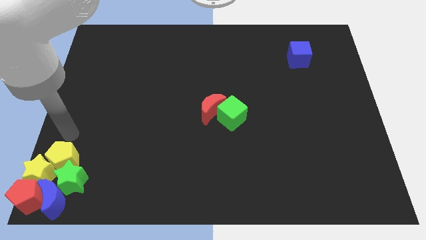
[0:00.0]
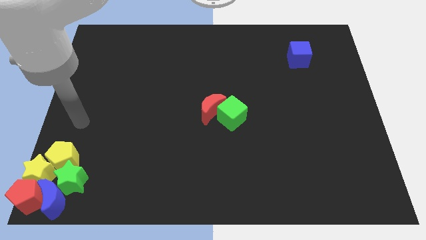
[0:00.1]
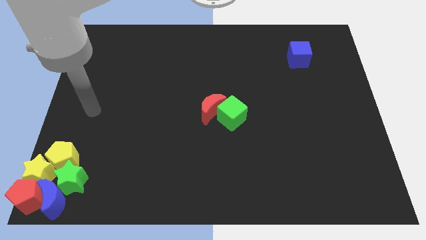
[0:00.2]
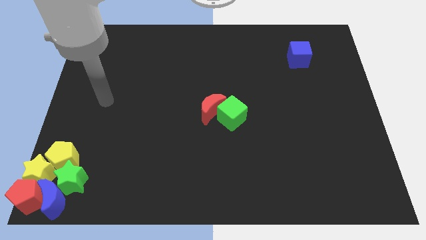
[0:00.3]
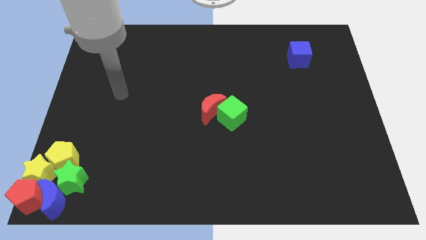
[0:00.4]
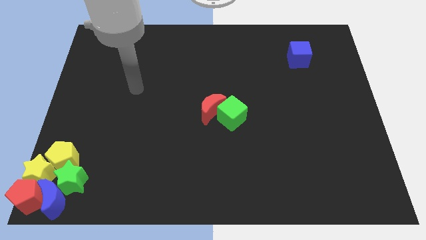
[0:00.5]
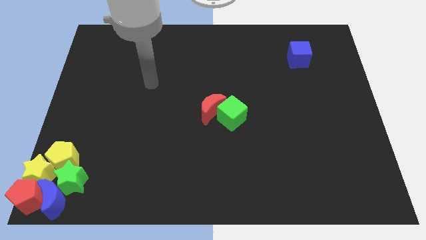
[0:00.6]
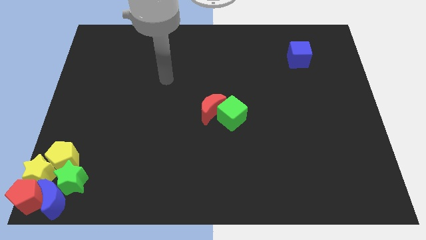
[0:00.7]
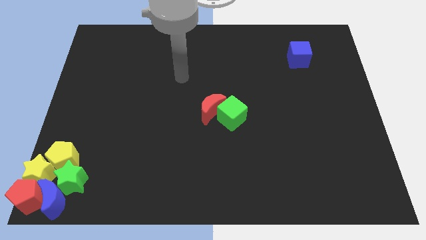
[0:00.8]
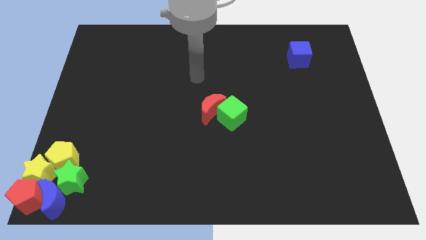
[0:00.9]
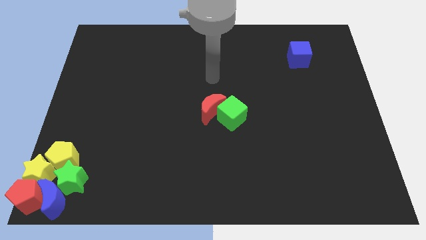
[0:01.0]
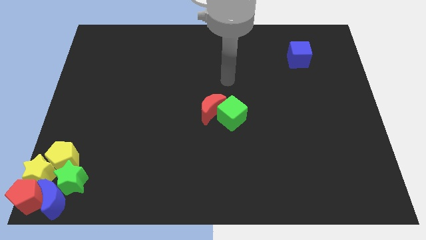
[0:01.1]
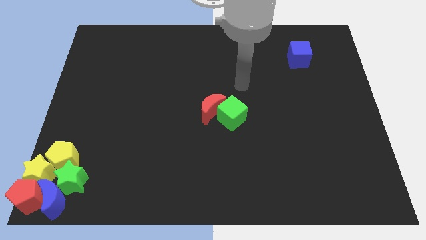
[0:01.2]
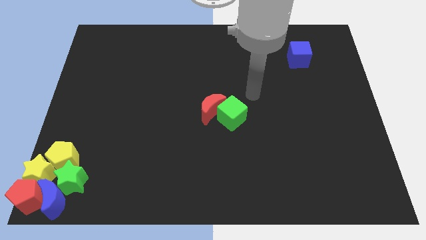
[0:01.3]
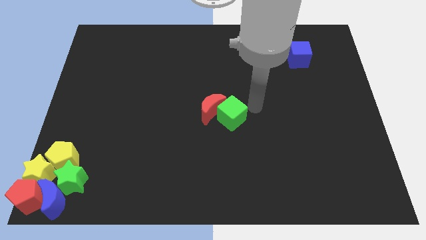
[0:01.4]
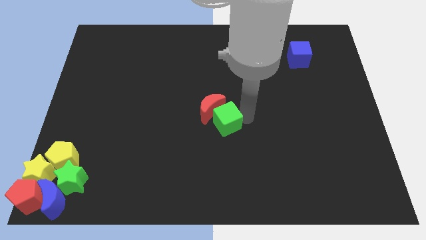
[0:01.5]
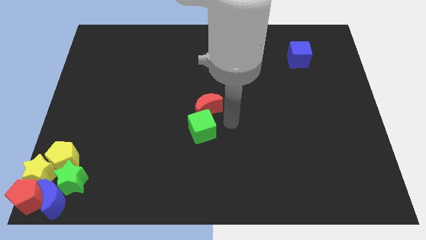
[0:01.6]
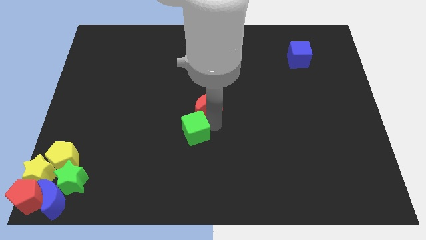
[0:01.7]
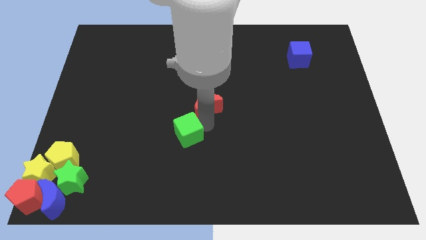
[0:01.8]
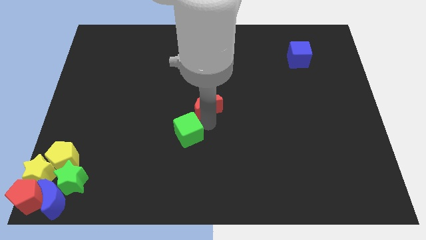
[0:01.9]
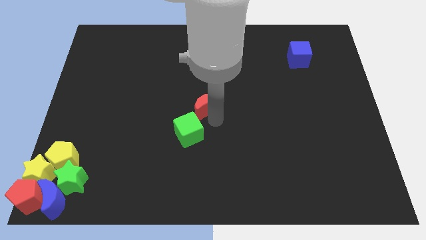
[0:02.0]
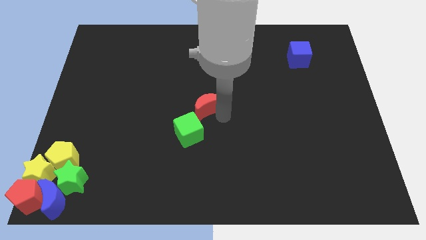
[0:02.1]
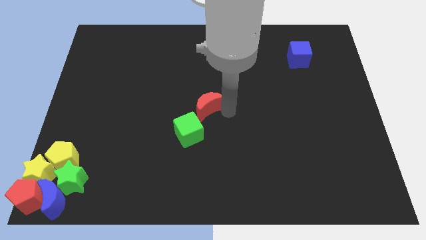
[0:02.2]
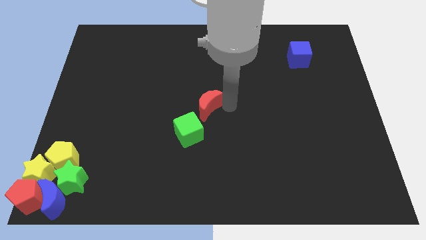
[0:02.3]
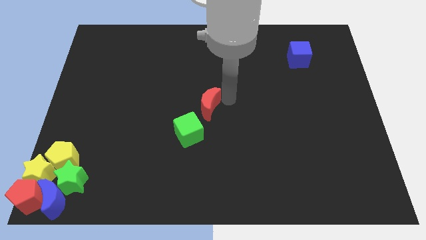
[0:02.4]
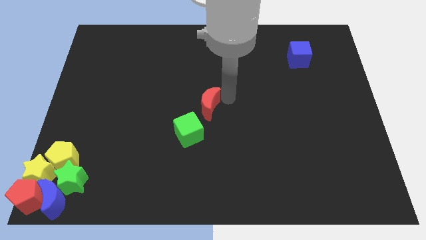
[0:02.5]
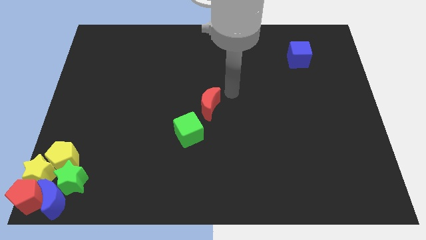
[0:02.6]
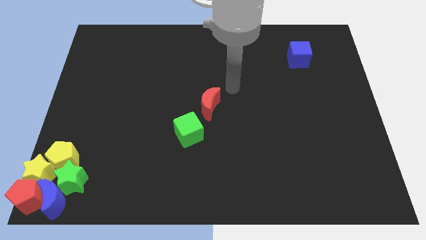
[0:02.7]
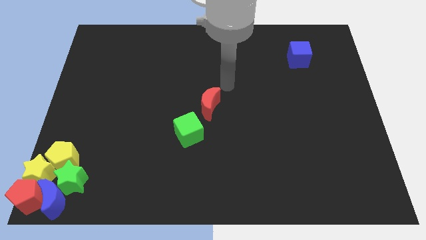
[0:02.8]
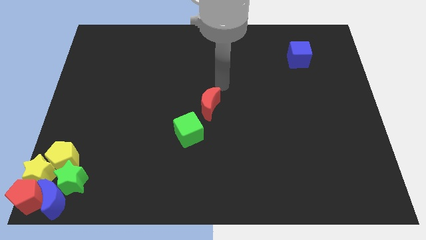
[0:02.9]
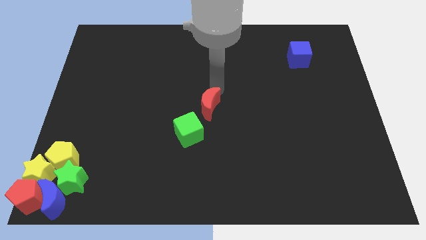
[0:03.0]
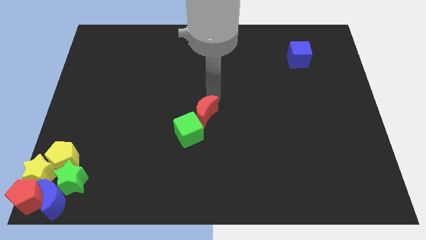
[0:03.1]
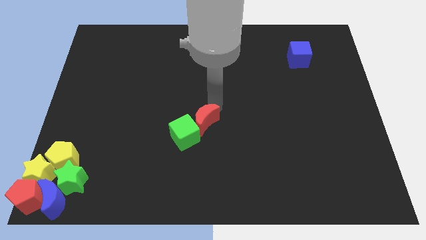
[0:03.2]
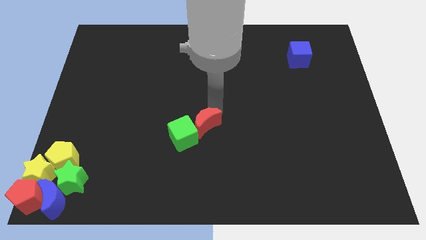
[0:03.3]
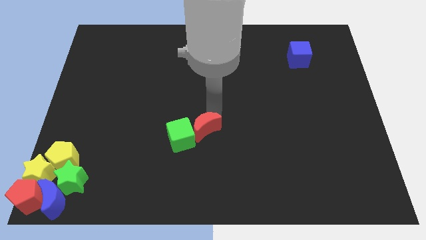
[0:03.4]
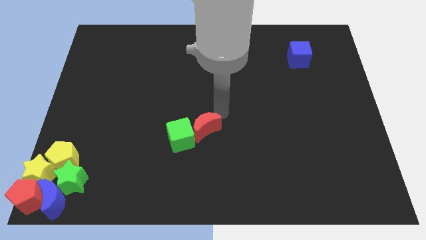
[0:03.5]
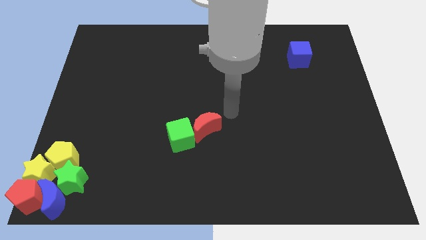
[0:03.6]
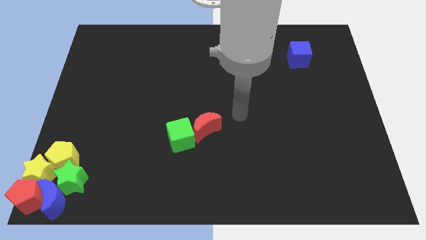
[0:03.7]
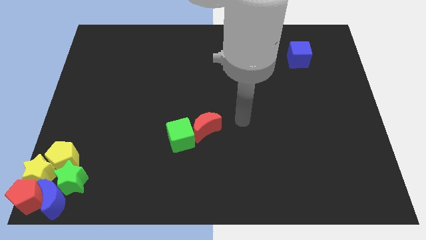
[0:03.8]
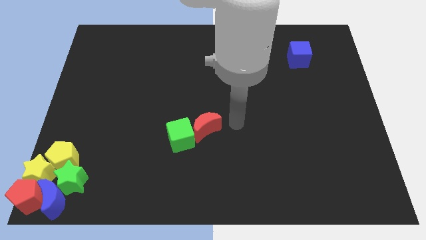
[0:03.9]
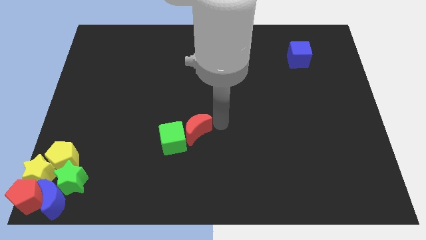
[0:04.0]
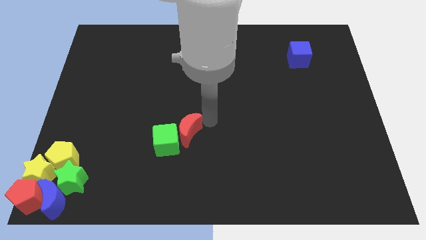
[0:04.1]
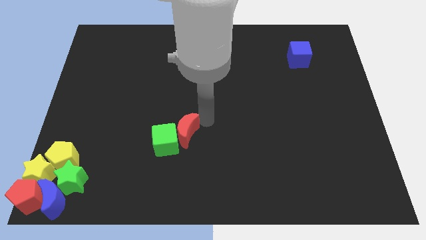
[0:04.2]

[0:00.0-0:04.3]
push the green cube and red moon towards the group of blocks

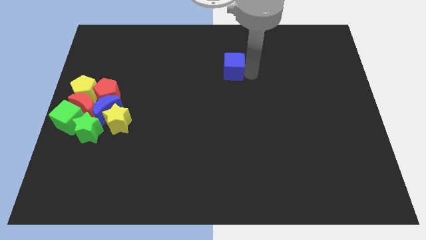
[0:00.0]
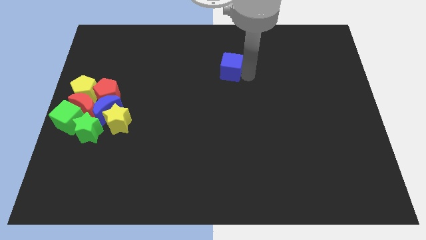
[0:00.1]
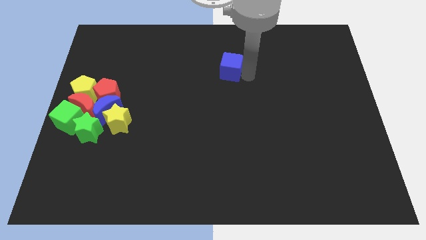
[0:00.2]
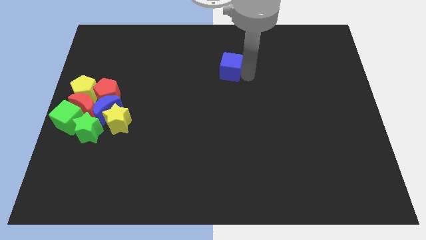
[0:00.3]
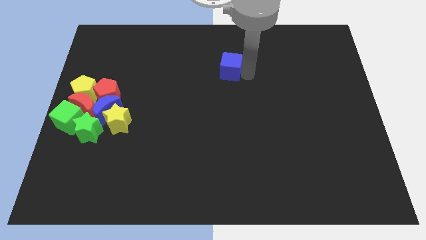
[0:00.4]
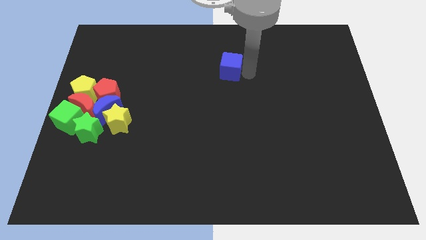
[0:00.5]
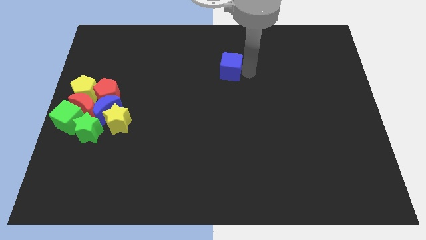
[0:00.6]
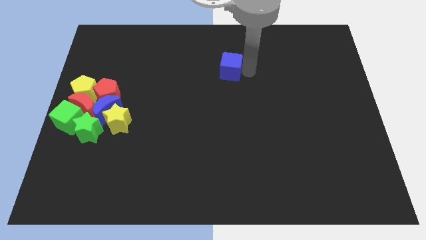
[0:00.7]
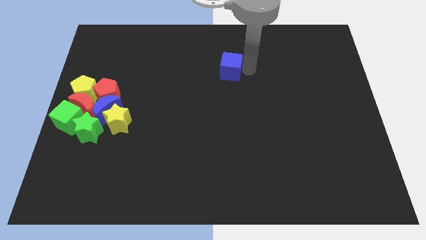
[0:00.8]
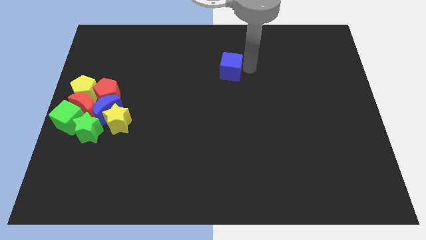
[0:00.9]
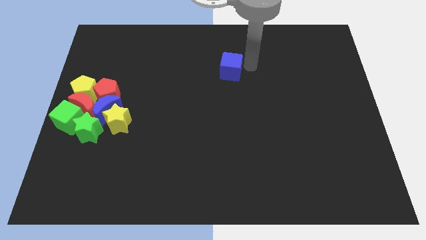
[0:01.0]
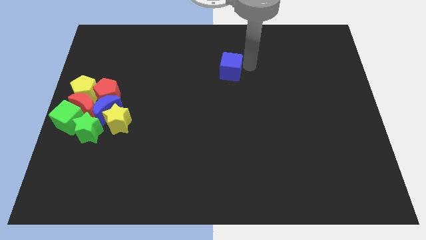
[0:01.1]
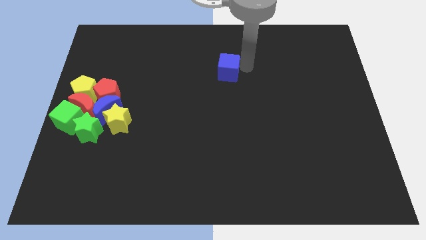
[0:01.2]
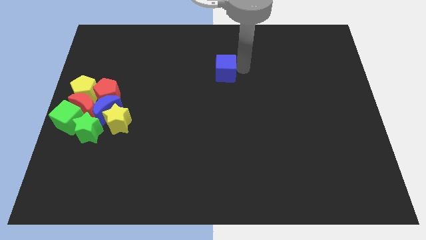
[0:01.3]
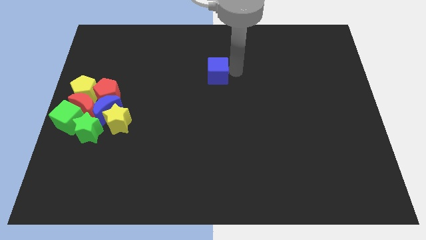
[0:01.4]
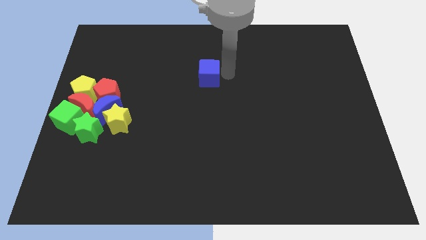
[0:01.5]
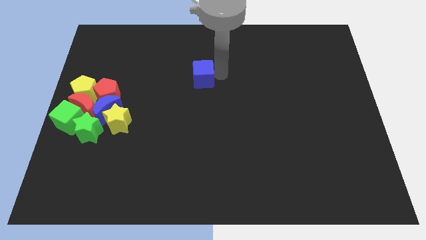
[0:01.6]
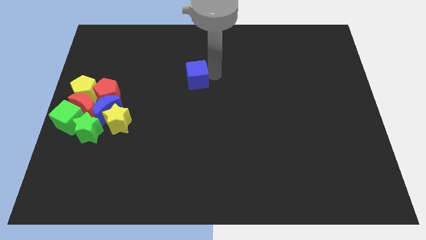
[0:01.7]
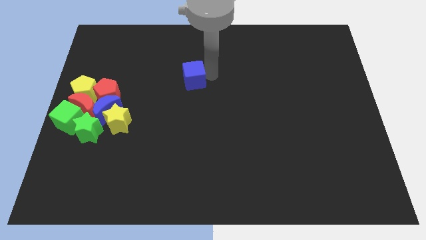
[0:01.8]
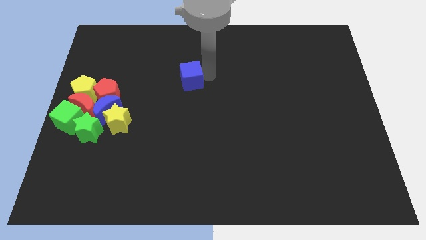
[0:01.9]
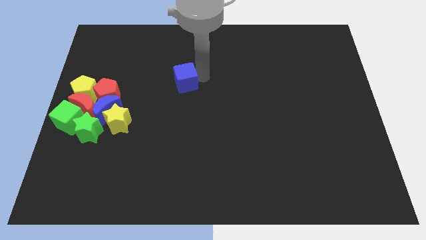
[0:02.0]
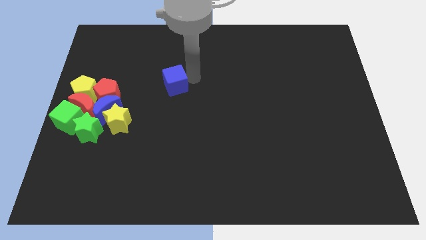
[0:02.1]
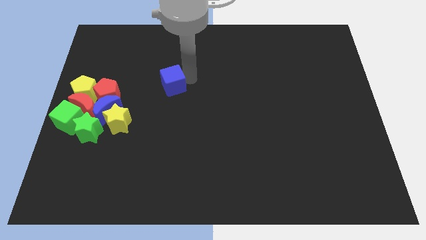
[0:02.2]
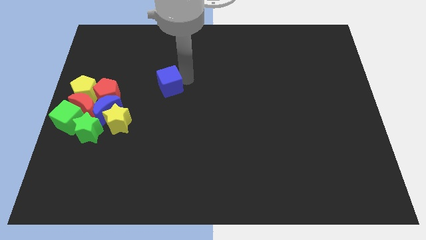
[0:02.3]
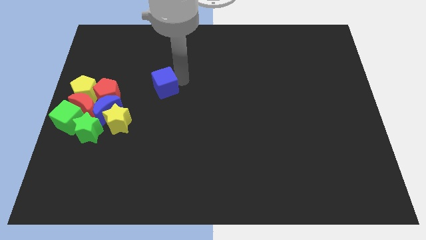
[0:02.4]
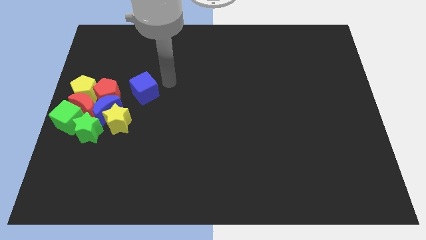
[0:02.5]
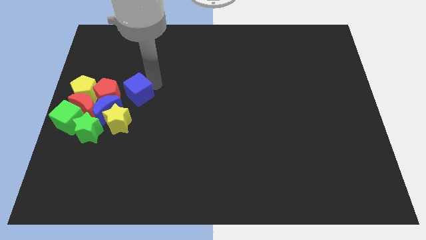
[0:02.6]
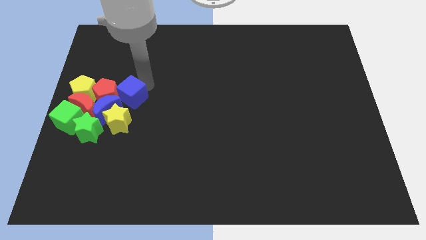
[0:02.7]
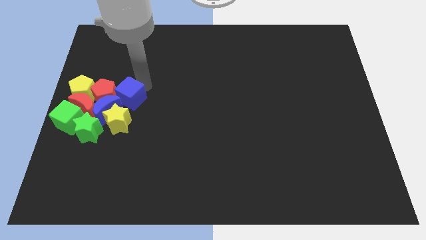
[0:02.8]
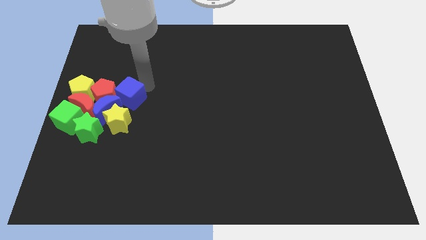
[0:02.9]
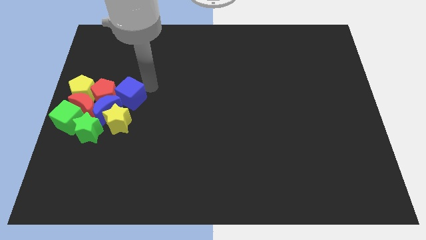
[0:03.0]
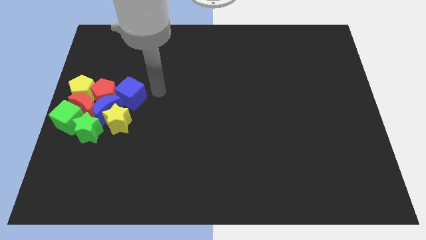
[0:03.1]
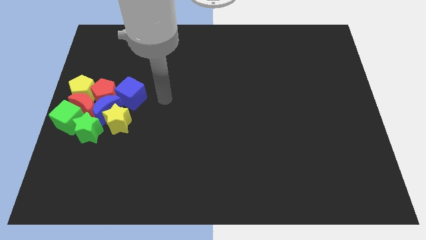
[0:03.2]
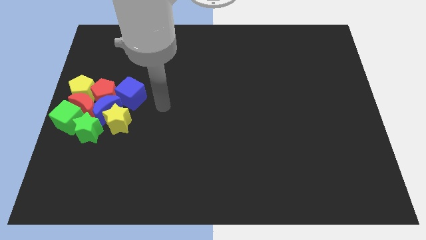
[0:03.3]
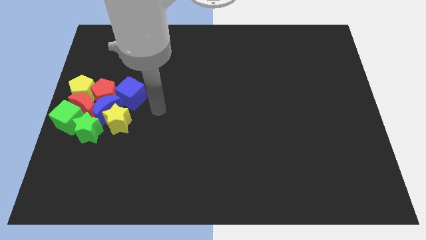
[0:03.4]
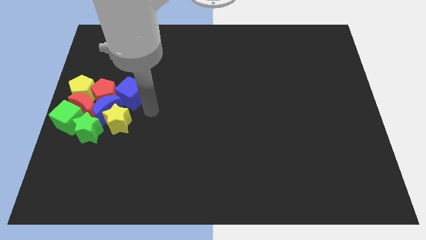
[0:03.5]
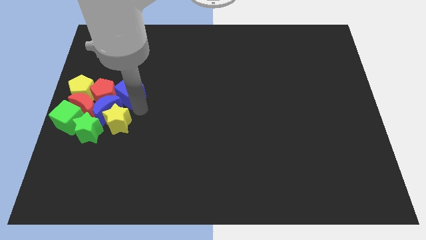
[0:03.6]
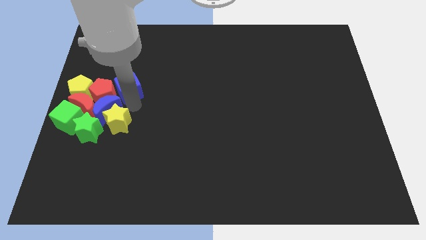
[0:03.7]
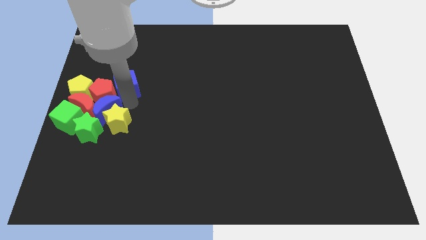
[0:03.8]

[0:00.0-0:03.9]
push the blue cube to the group of blocks

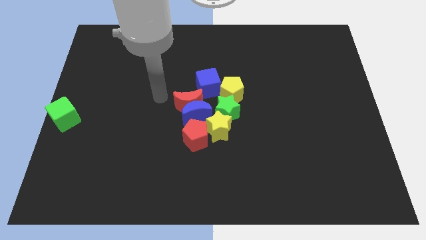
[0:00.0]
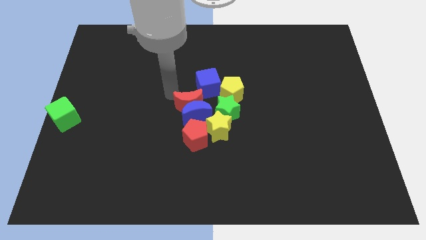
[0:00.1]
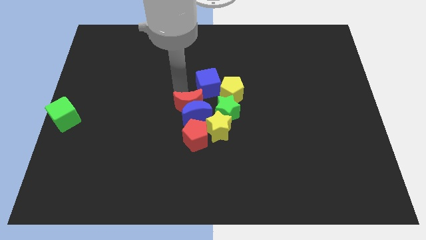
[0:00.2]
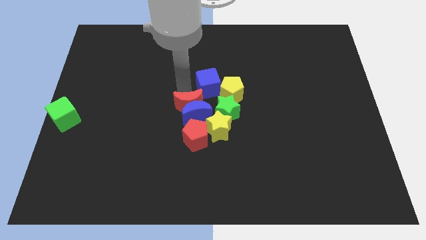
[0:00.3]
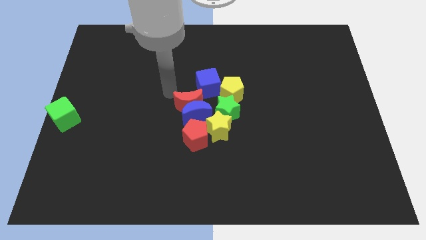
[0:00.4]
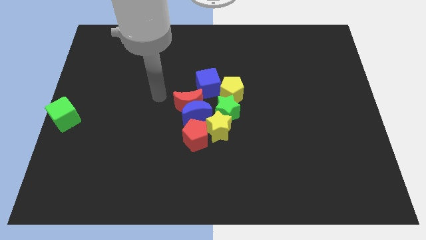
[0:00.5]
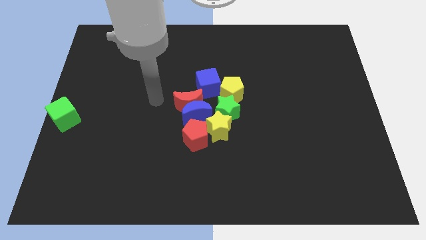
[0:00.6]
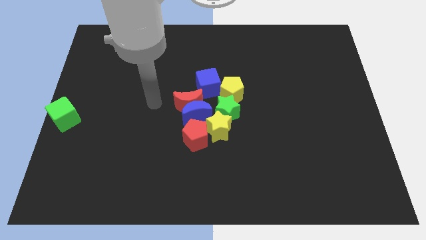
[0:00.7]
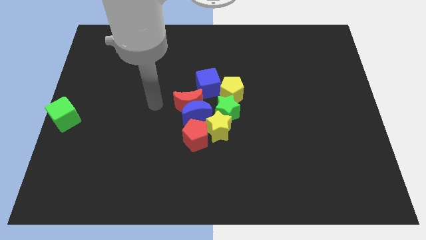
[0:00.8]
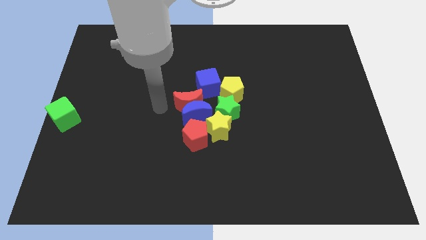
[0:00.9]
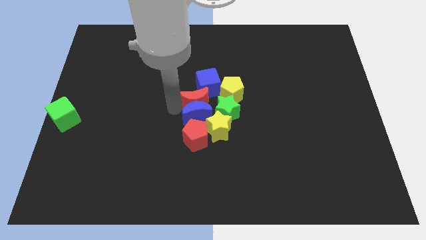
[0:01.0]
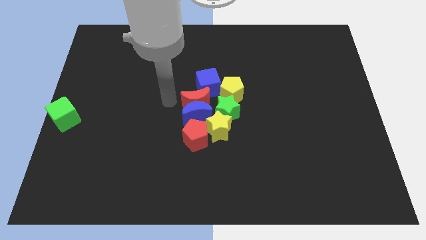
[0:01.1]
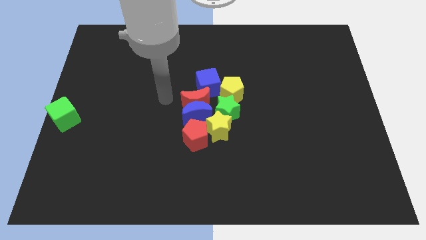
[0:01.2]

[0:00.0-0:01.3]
tap the left side of the red crescent
